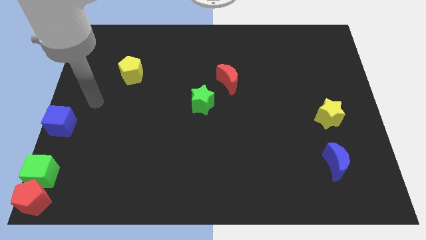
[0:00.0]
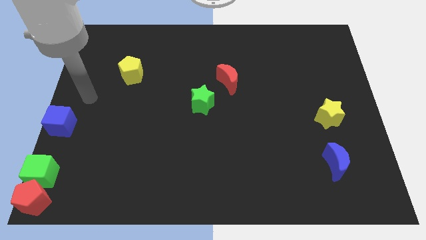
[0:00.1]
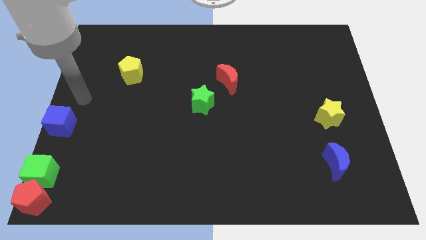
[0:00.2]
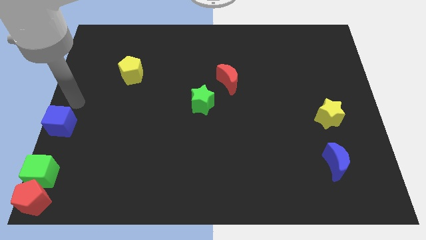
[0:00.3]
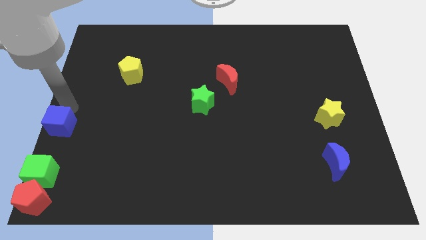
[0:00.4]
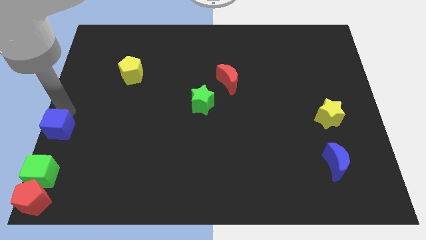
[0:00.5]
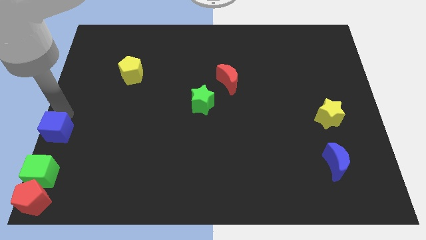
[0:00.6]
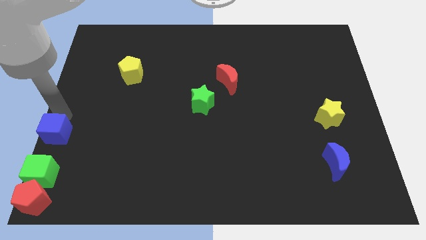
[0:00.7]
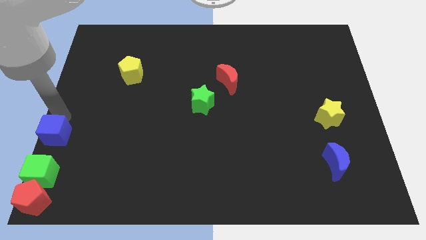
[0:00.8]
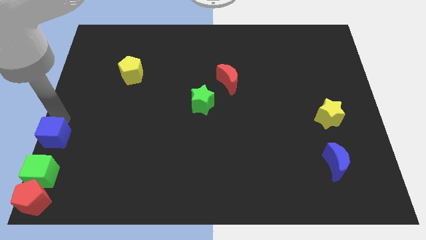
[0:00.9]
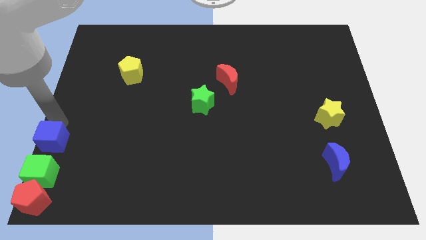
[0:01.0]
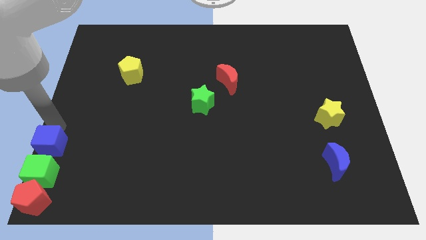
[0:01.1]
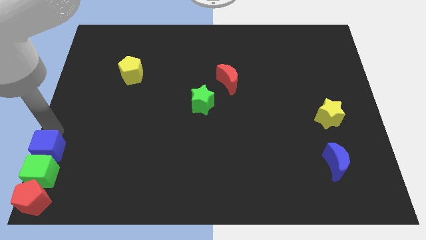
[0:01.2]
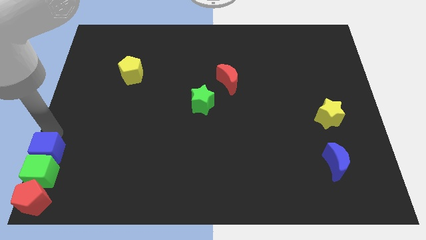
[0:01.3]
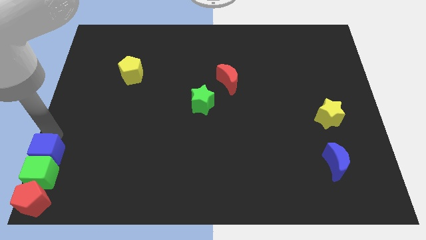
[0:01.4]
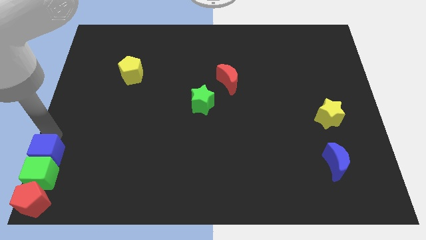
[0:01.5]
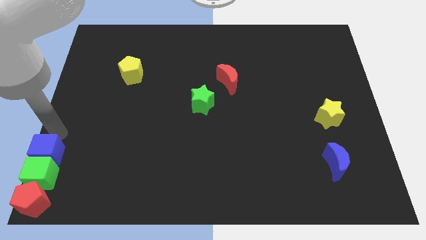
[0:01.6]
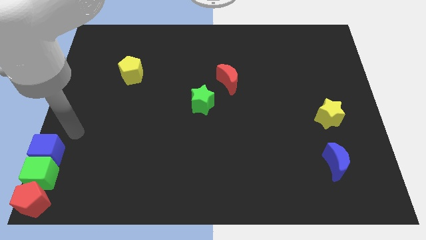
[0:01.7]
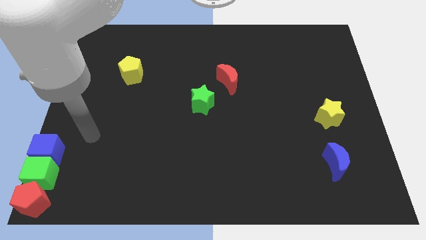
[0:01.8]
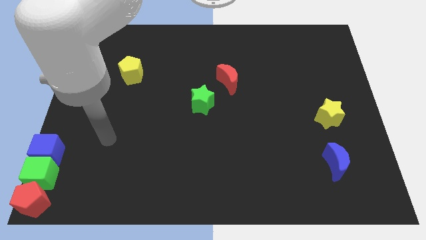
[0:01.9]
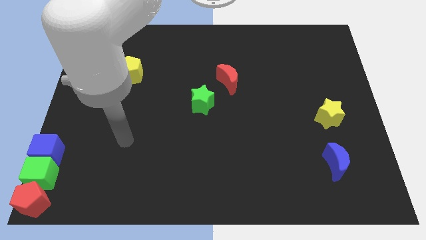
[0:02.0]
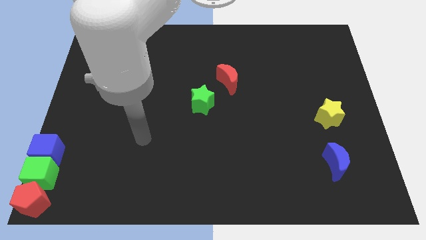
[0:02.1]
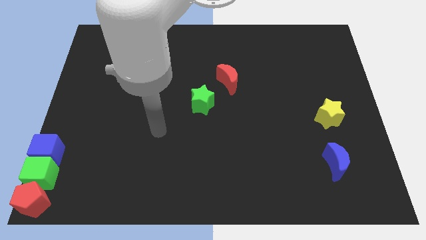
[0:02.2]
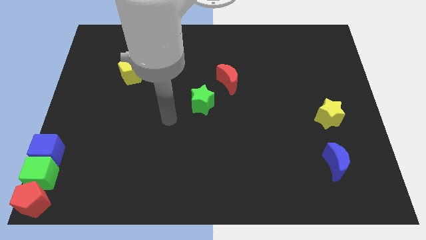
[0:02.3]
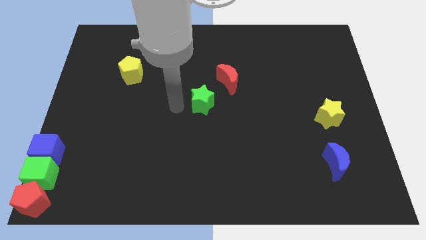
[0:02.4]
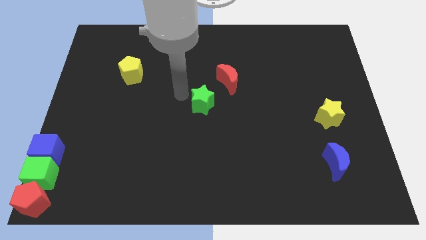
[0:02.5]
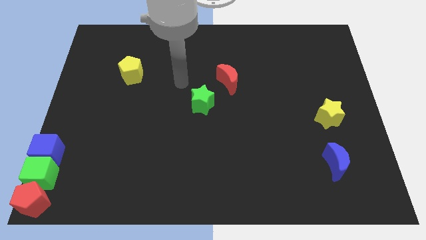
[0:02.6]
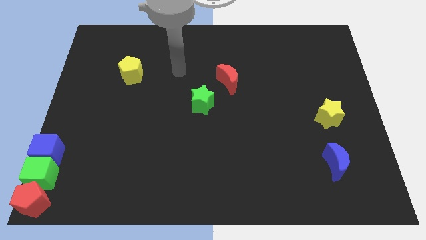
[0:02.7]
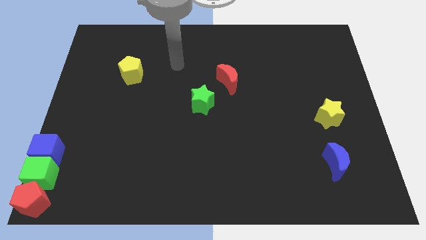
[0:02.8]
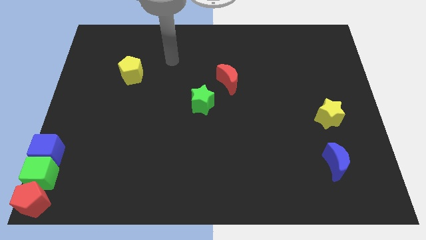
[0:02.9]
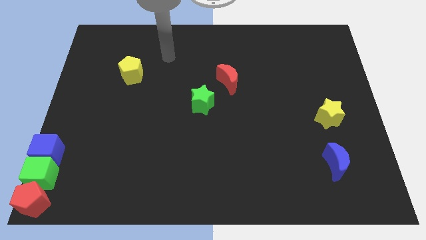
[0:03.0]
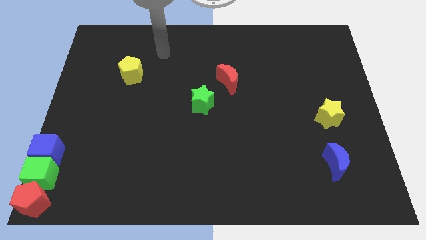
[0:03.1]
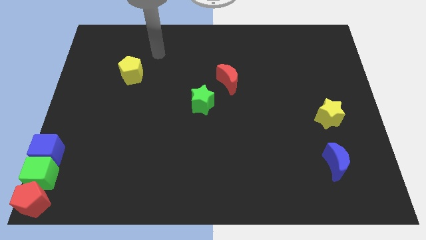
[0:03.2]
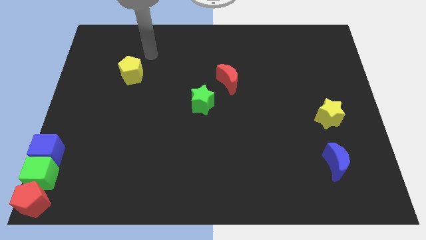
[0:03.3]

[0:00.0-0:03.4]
push the blue cube into the green cube

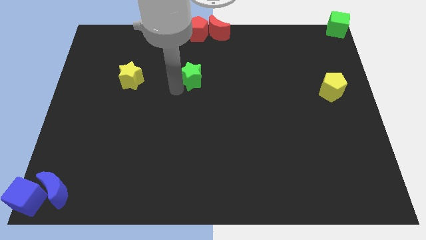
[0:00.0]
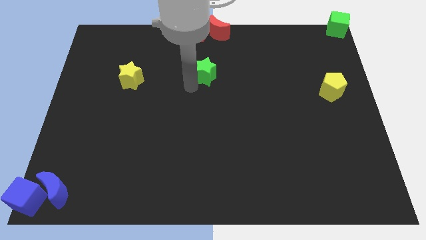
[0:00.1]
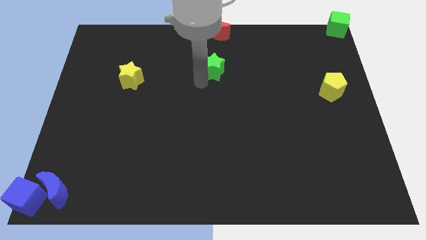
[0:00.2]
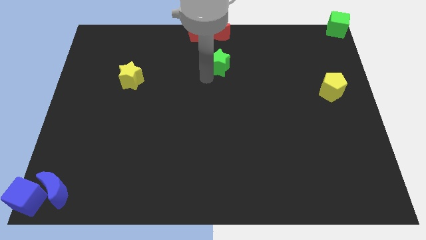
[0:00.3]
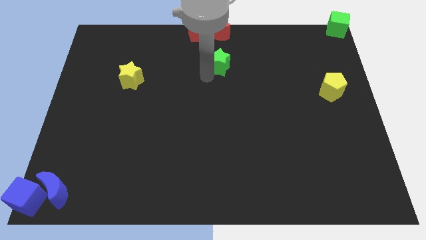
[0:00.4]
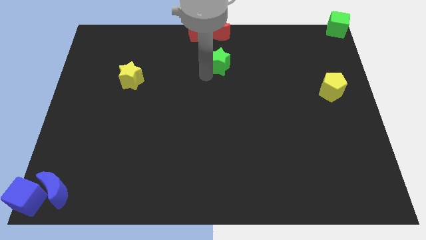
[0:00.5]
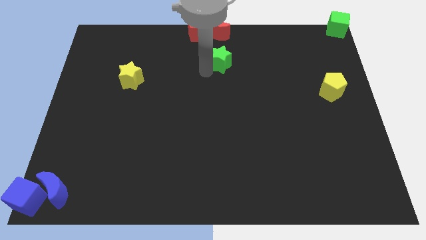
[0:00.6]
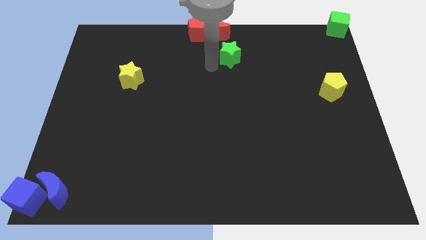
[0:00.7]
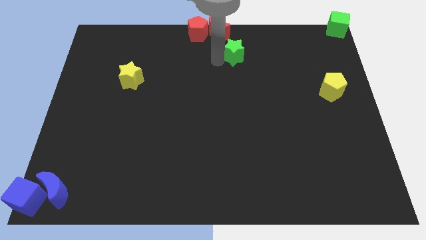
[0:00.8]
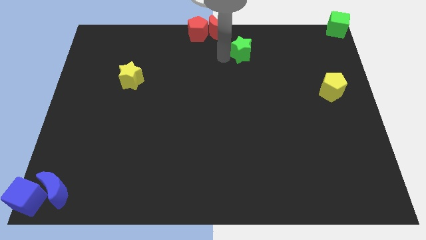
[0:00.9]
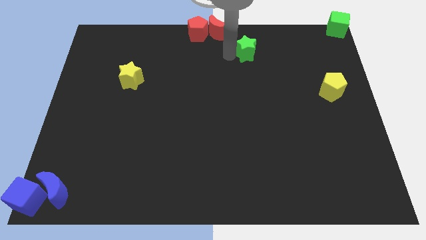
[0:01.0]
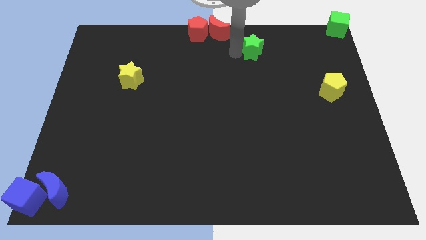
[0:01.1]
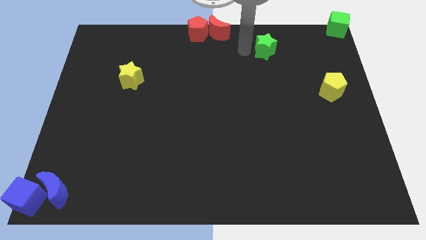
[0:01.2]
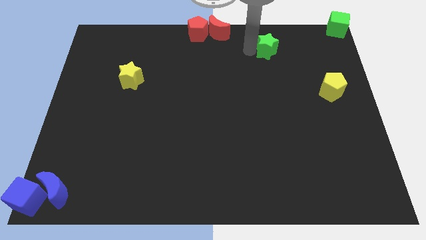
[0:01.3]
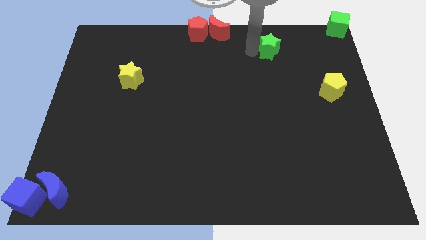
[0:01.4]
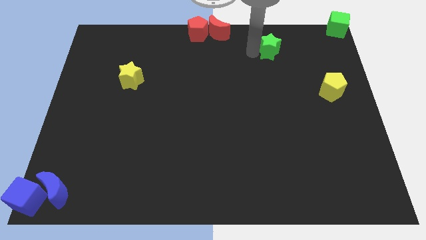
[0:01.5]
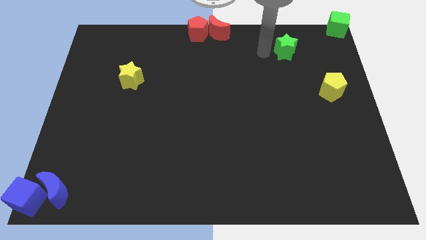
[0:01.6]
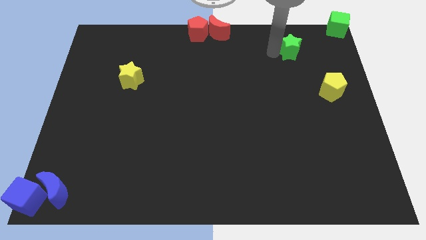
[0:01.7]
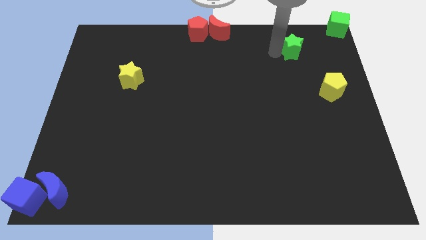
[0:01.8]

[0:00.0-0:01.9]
push the green star towards the top right corner

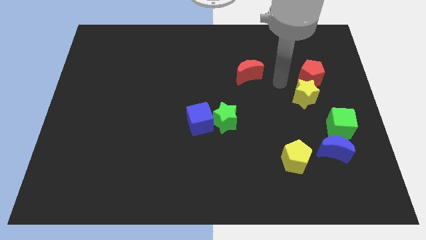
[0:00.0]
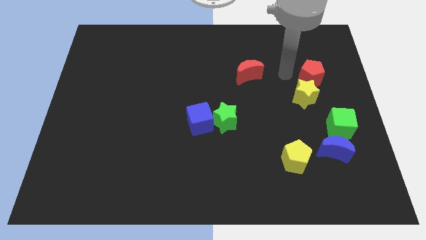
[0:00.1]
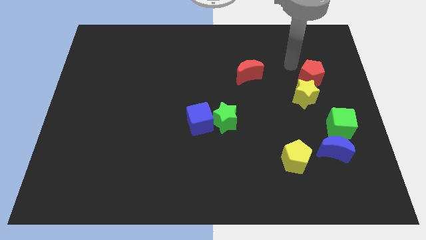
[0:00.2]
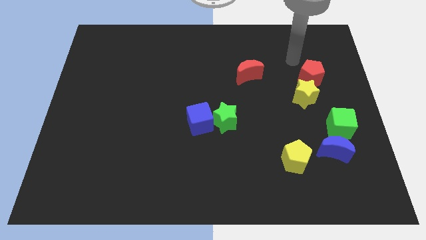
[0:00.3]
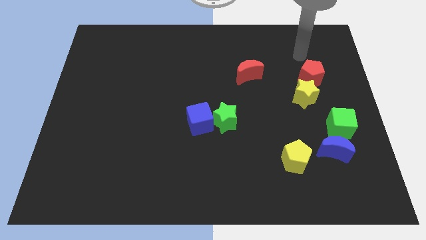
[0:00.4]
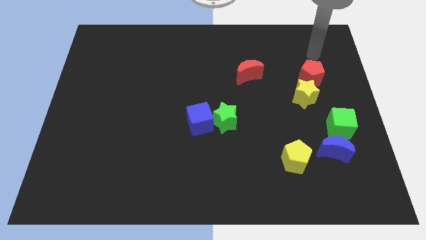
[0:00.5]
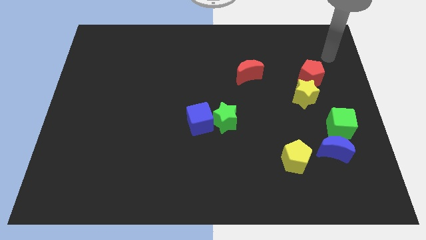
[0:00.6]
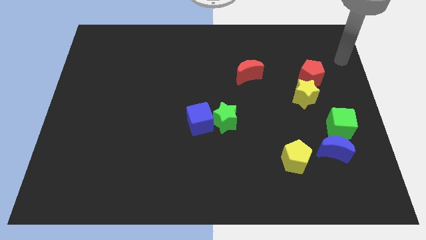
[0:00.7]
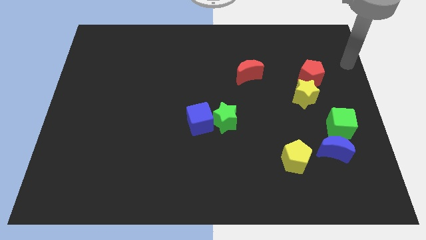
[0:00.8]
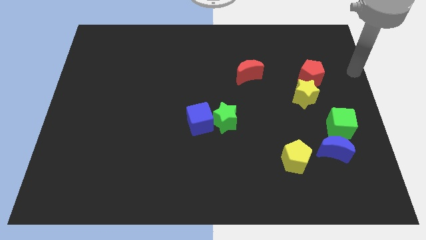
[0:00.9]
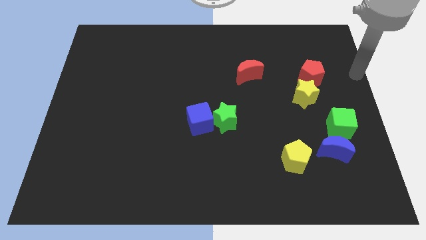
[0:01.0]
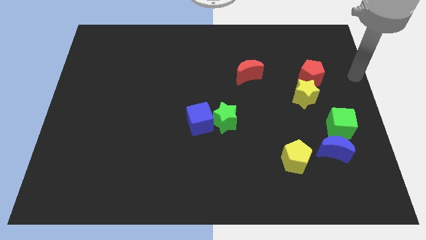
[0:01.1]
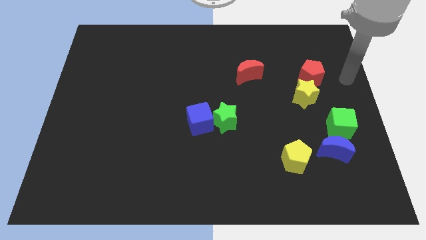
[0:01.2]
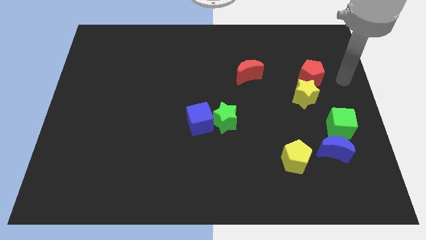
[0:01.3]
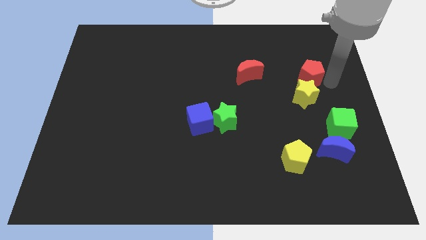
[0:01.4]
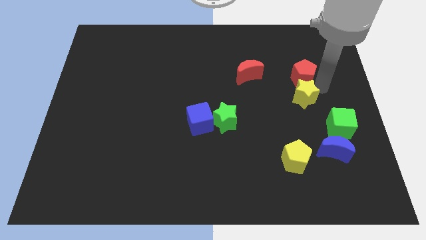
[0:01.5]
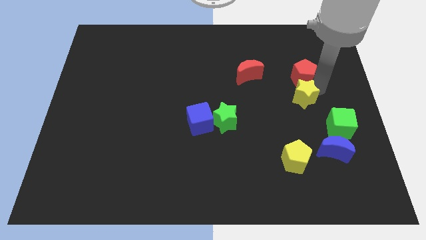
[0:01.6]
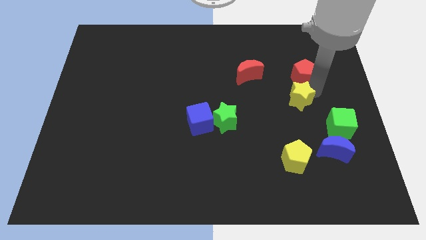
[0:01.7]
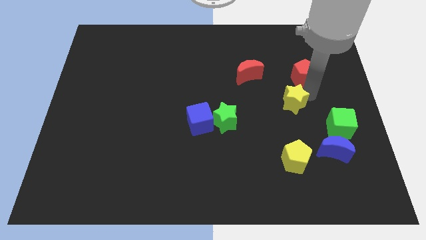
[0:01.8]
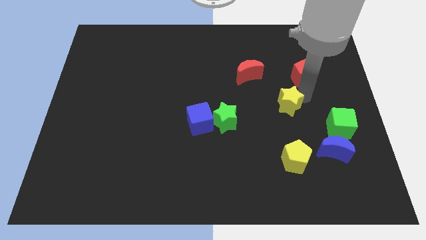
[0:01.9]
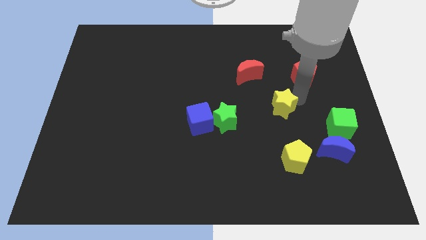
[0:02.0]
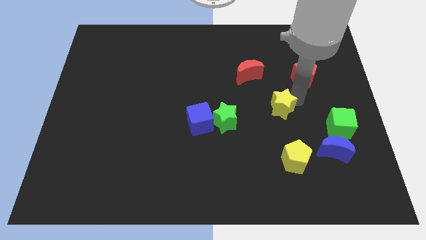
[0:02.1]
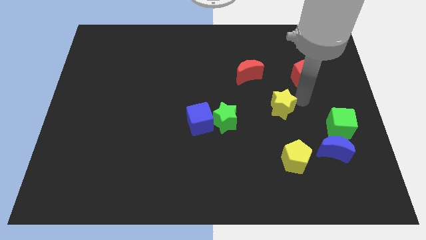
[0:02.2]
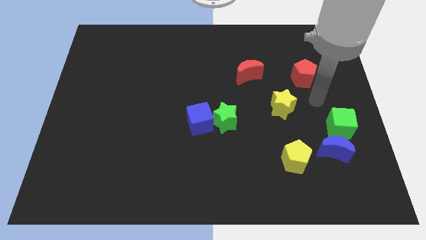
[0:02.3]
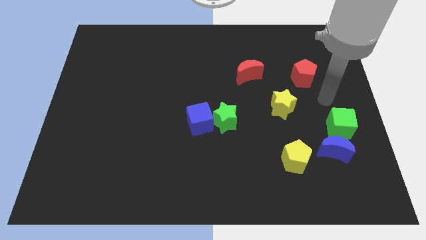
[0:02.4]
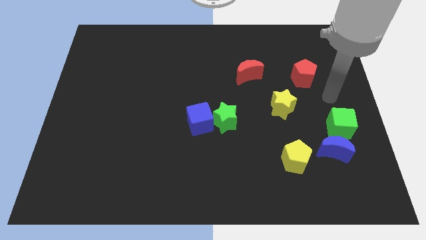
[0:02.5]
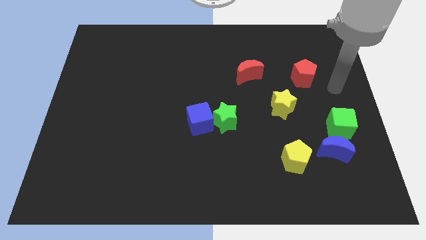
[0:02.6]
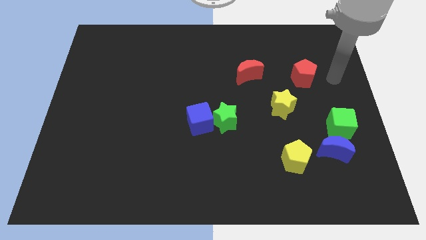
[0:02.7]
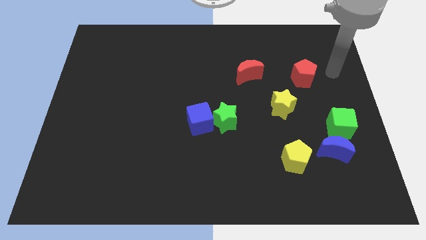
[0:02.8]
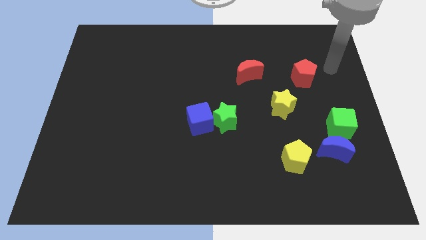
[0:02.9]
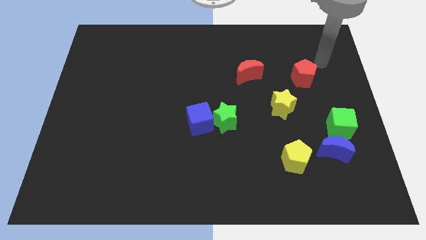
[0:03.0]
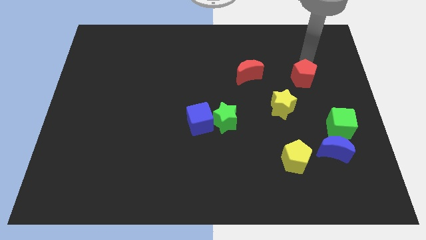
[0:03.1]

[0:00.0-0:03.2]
separate the yellow star from the red pentagon

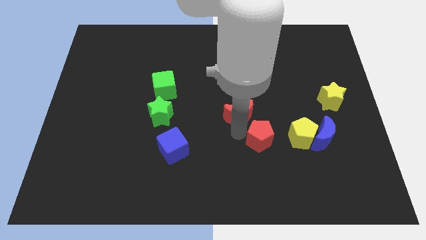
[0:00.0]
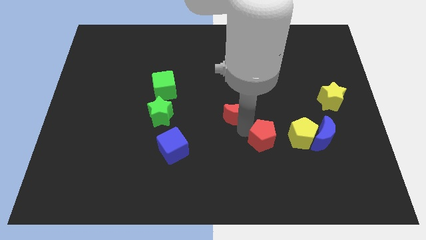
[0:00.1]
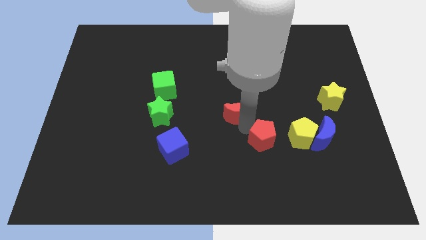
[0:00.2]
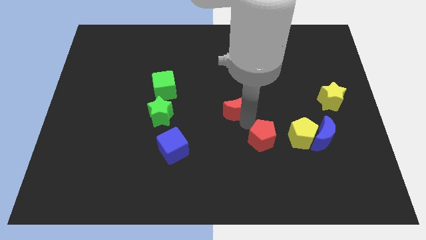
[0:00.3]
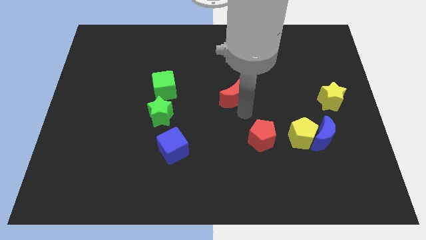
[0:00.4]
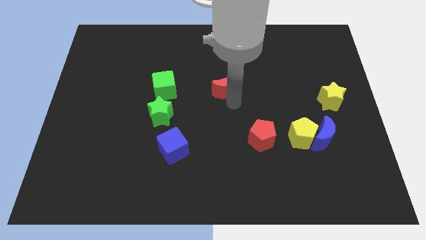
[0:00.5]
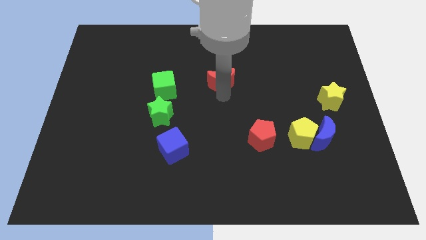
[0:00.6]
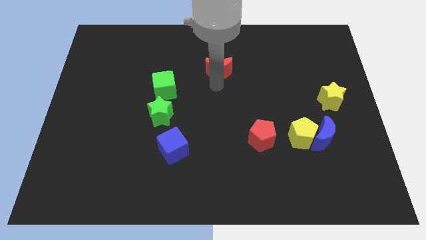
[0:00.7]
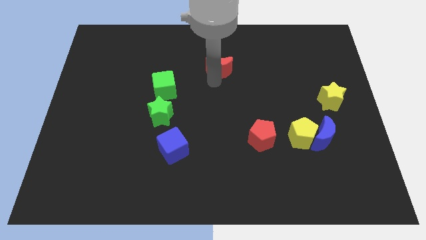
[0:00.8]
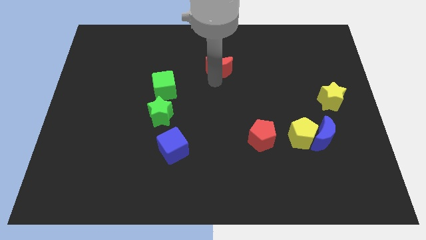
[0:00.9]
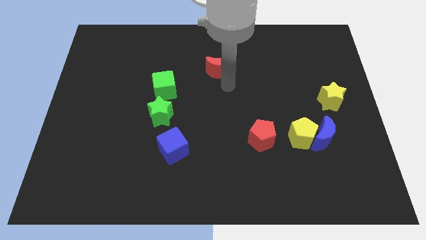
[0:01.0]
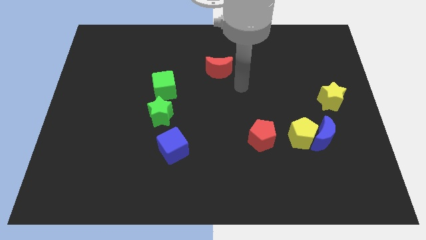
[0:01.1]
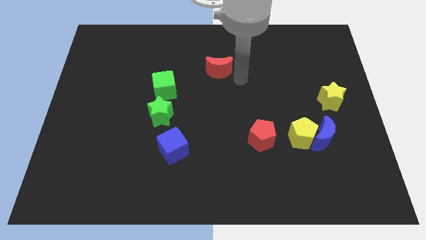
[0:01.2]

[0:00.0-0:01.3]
push the red crescent to the top center
